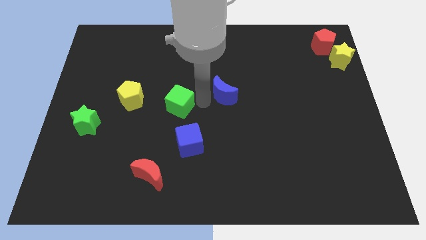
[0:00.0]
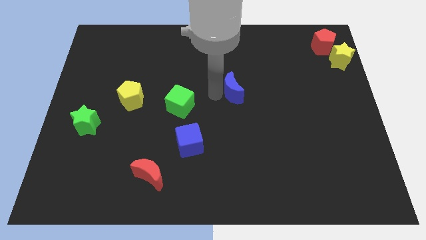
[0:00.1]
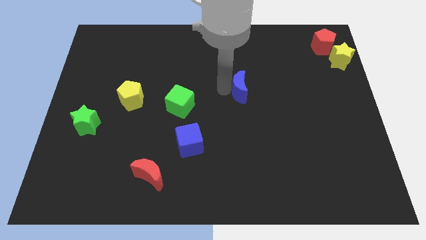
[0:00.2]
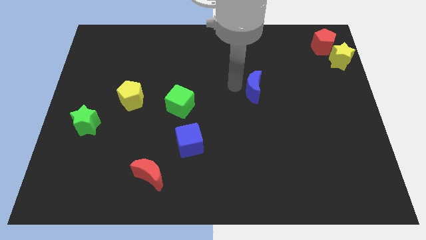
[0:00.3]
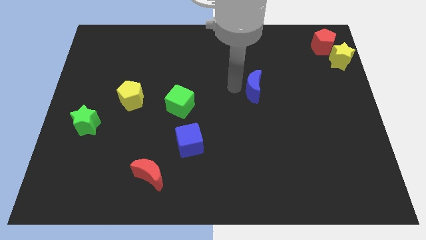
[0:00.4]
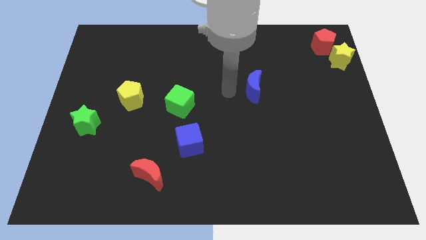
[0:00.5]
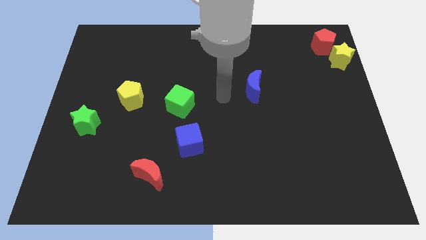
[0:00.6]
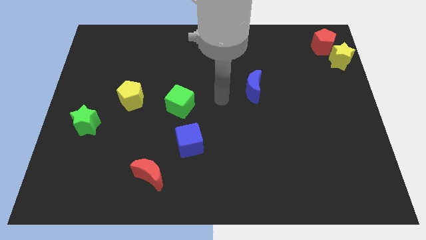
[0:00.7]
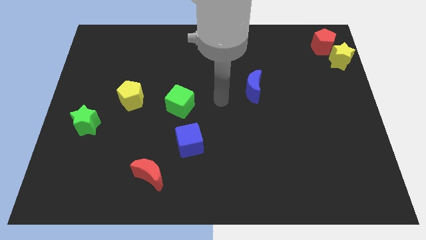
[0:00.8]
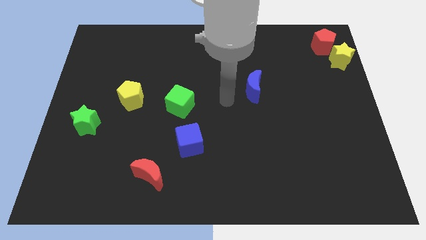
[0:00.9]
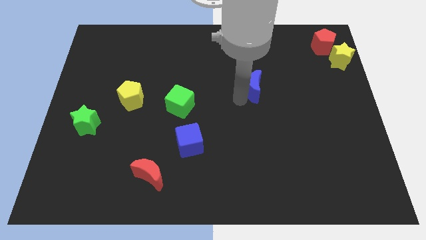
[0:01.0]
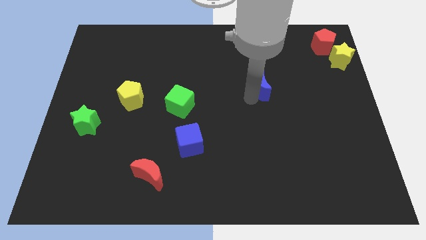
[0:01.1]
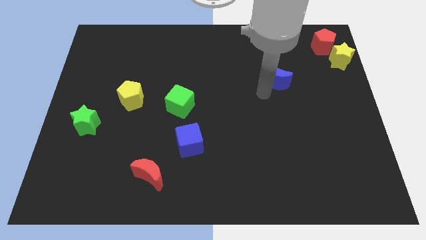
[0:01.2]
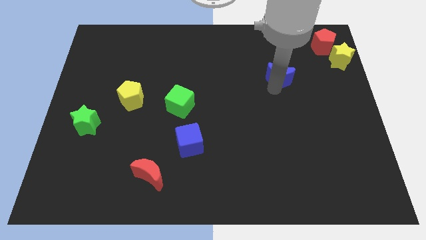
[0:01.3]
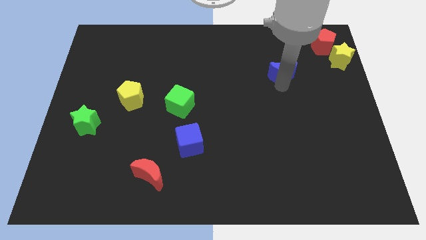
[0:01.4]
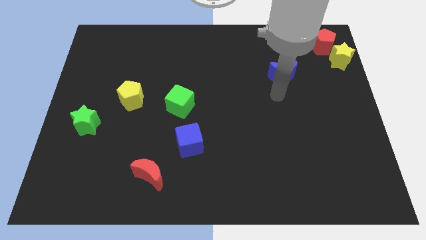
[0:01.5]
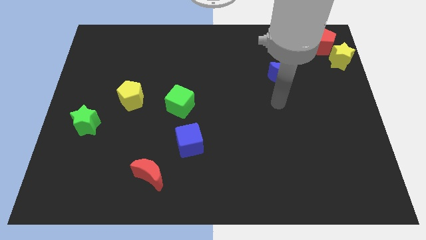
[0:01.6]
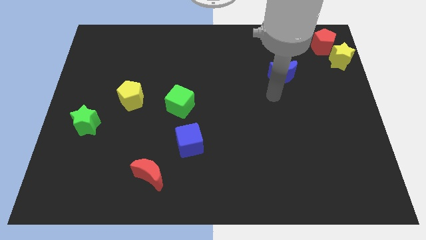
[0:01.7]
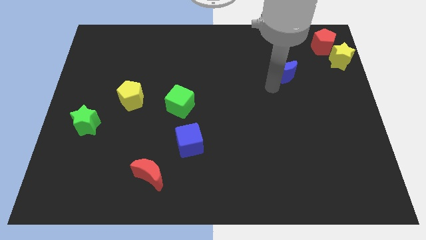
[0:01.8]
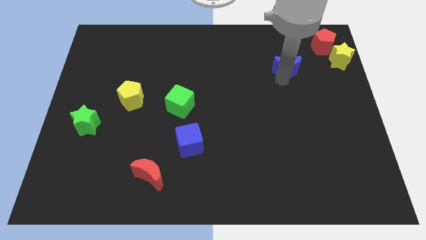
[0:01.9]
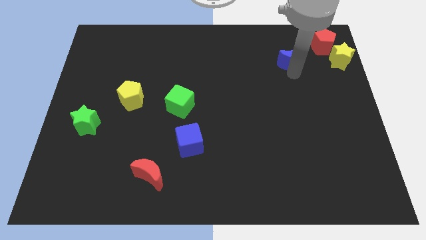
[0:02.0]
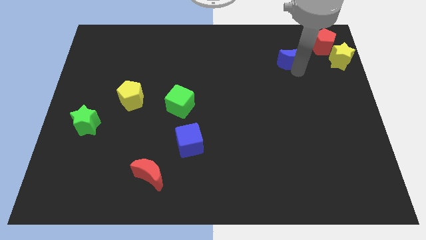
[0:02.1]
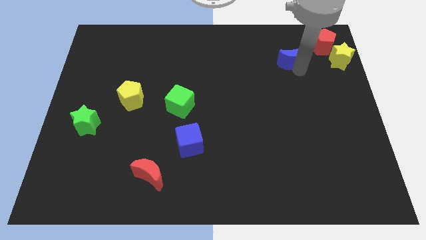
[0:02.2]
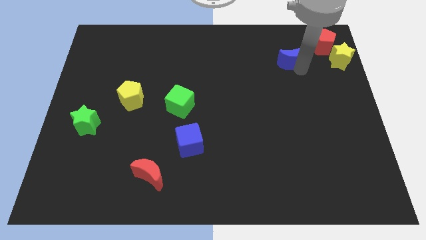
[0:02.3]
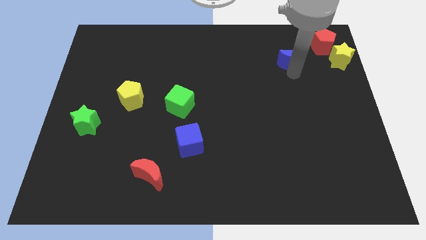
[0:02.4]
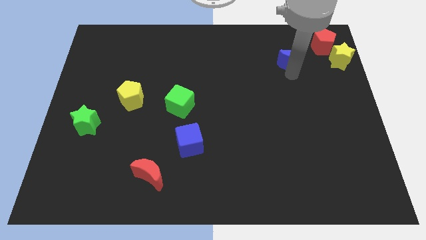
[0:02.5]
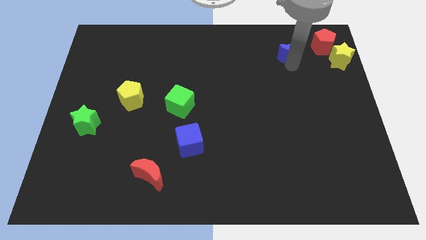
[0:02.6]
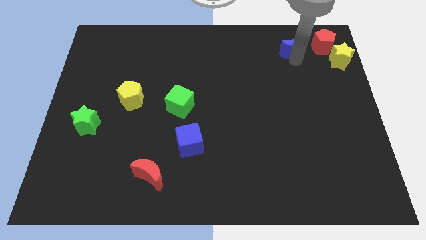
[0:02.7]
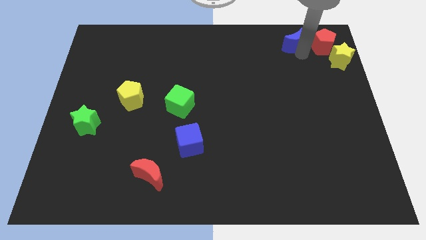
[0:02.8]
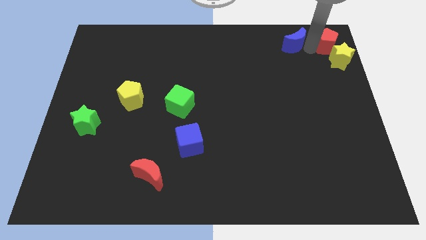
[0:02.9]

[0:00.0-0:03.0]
push the blue moon towards the top right corner of the board

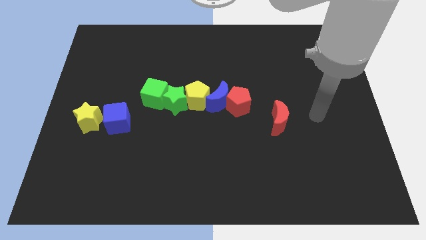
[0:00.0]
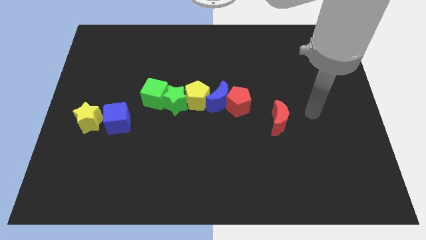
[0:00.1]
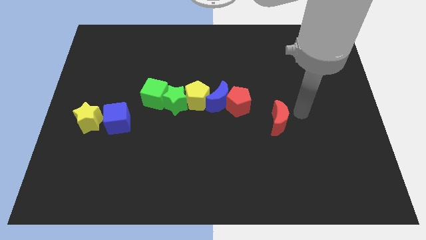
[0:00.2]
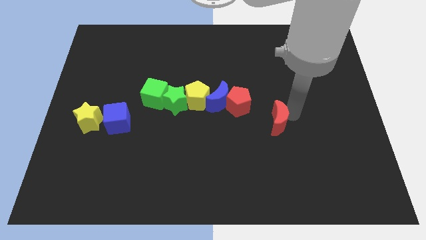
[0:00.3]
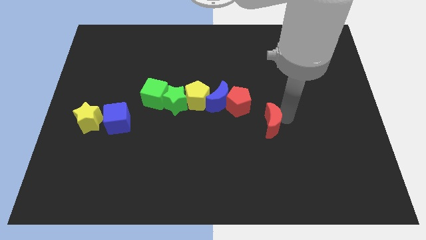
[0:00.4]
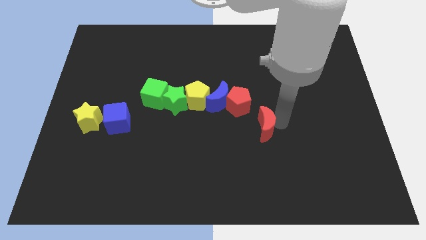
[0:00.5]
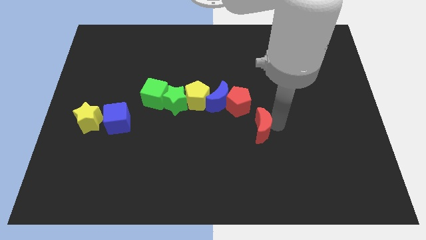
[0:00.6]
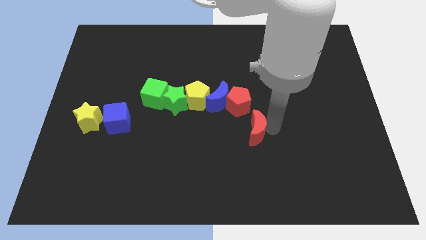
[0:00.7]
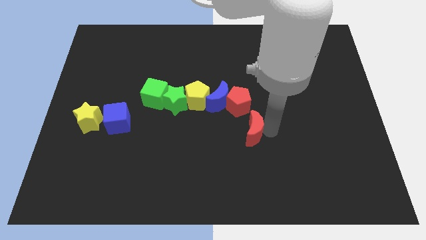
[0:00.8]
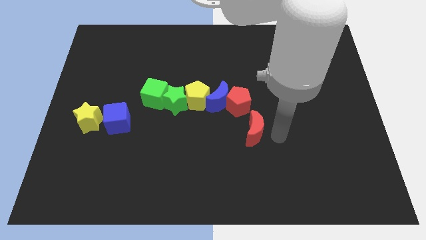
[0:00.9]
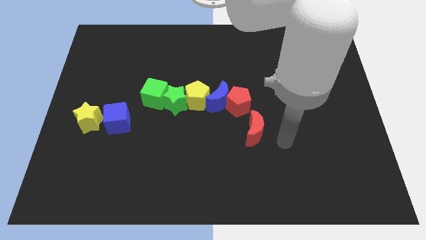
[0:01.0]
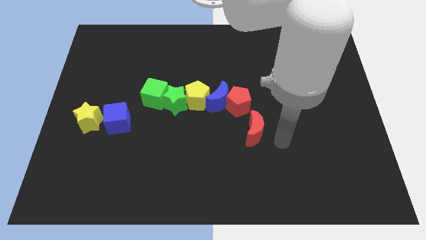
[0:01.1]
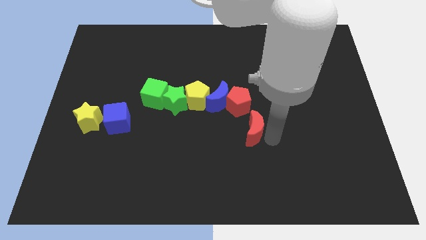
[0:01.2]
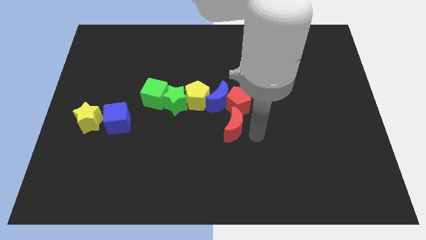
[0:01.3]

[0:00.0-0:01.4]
place the red crescent under the red pentagon

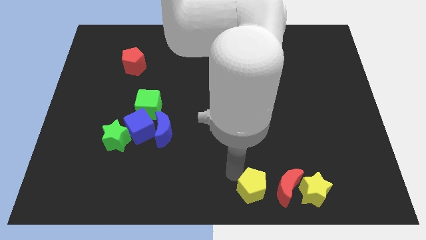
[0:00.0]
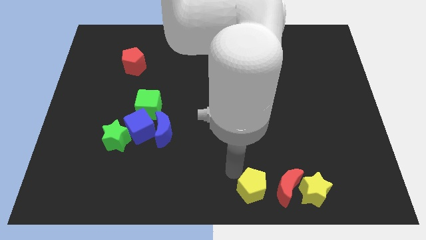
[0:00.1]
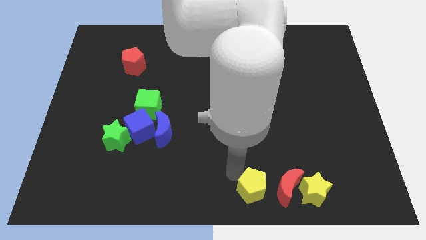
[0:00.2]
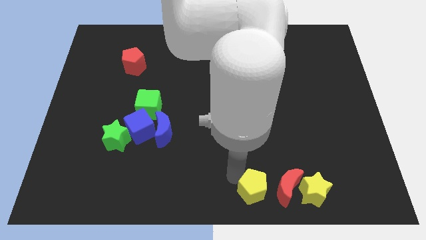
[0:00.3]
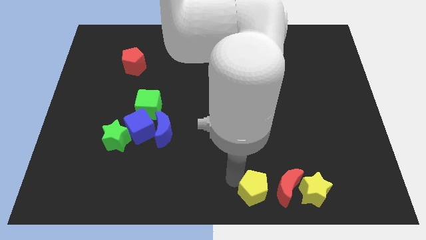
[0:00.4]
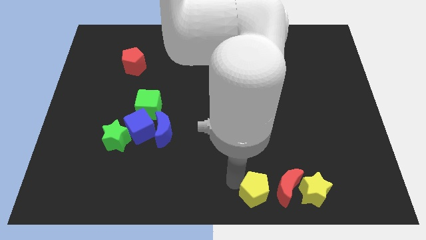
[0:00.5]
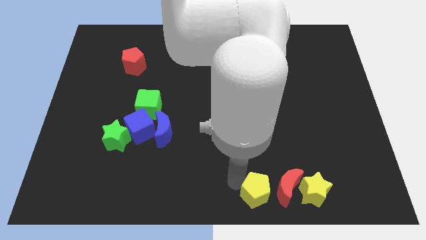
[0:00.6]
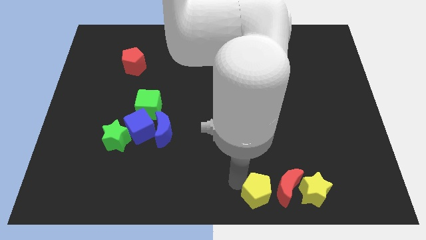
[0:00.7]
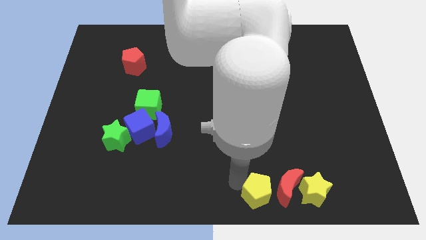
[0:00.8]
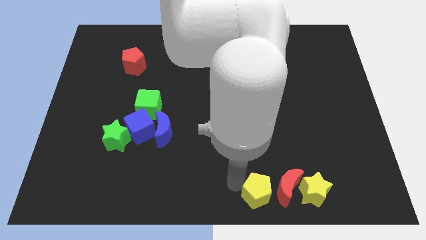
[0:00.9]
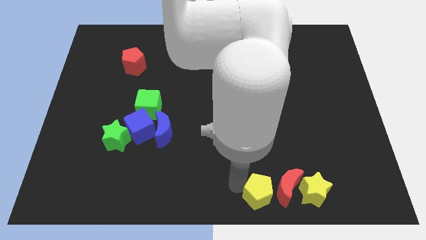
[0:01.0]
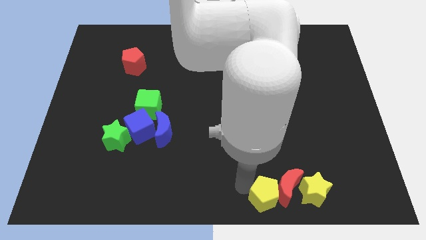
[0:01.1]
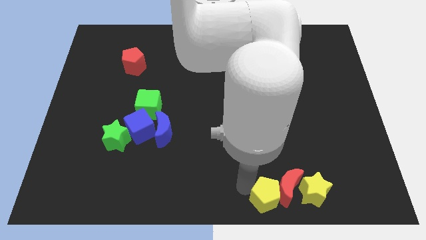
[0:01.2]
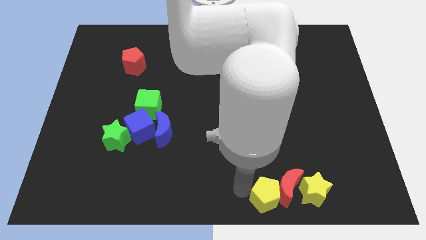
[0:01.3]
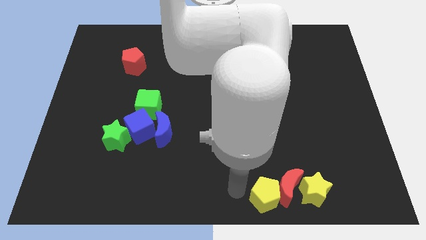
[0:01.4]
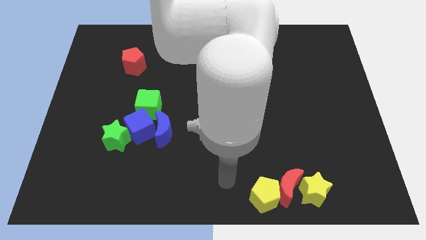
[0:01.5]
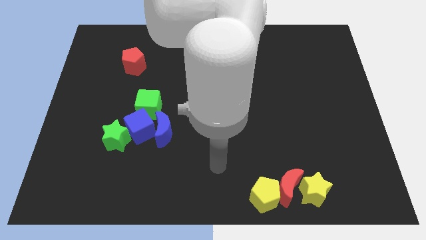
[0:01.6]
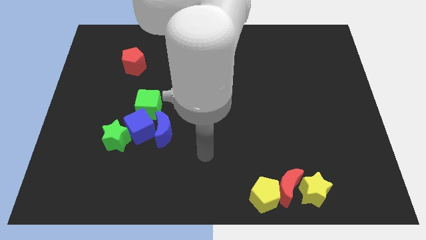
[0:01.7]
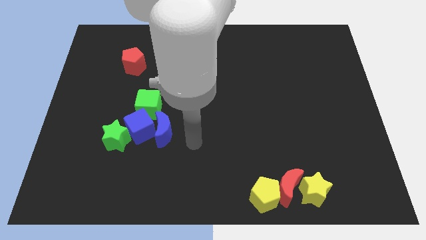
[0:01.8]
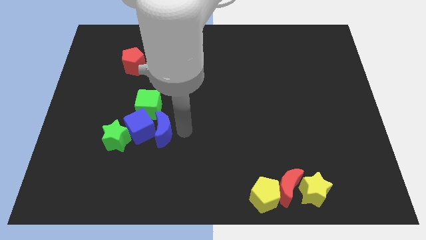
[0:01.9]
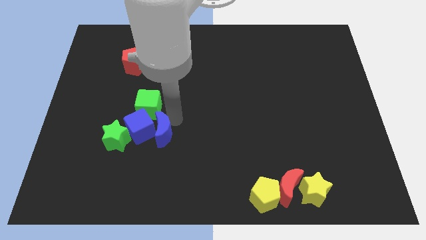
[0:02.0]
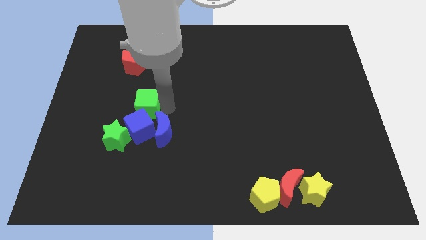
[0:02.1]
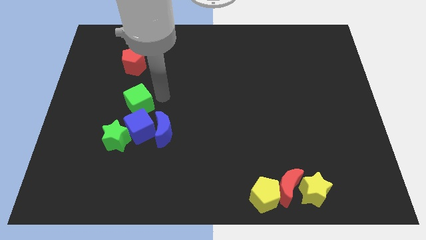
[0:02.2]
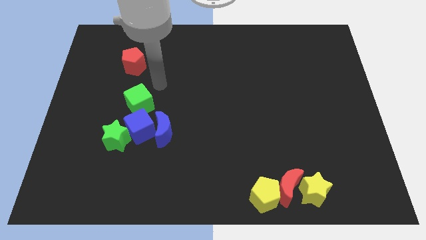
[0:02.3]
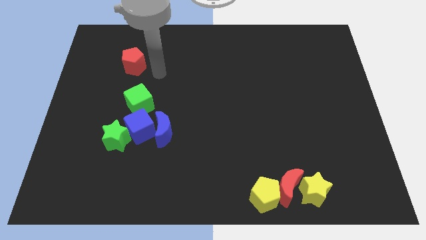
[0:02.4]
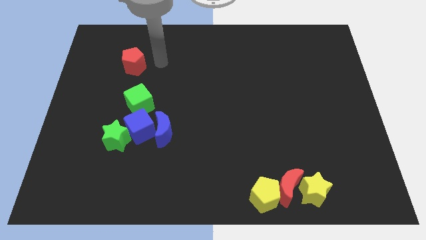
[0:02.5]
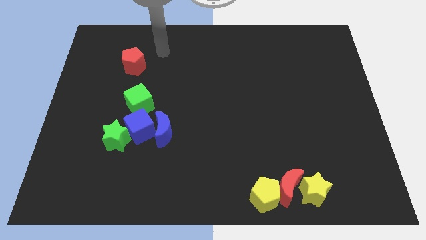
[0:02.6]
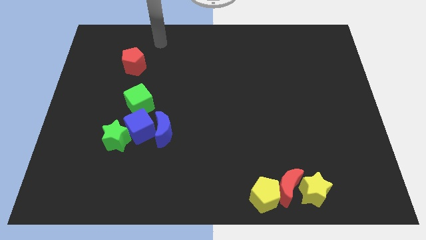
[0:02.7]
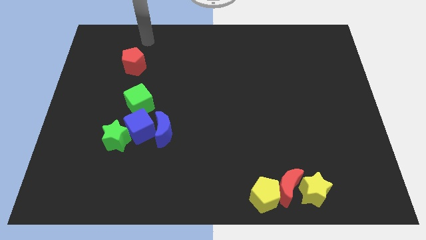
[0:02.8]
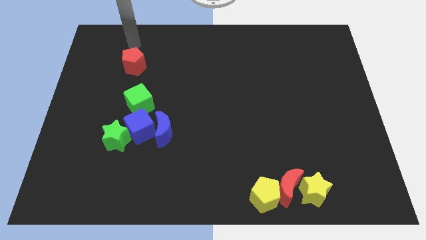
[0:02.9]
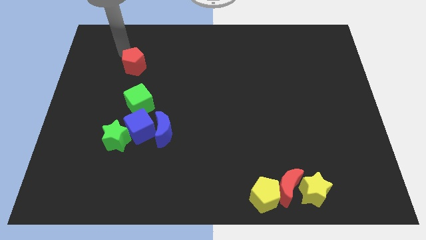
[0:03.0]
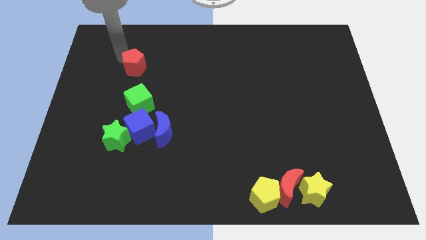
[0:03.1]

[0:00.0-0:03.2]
tap green cube slightly

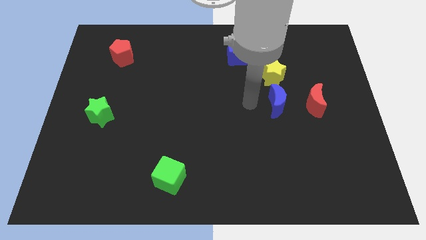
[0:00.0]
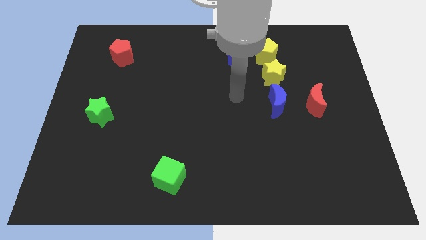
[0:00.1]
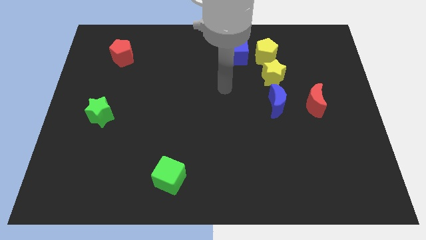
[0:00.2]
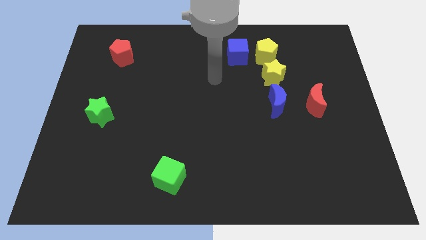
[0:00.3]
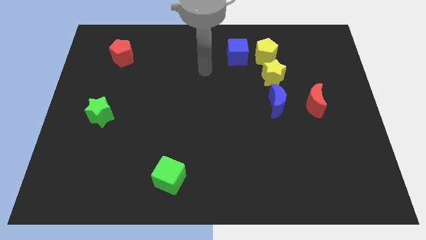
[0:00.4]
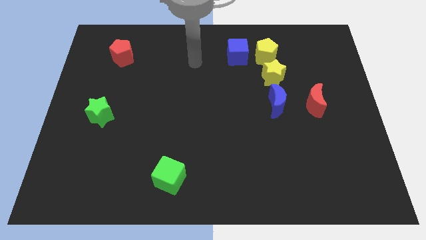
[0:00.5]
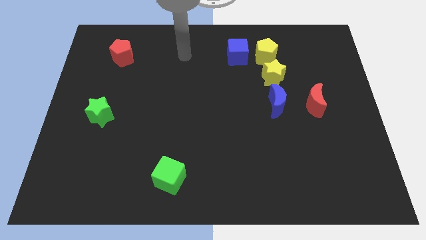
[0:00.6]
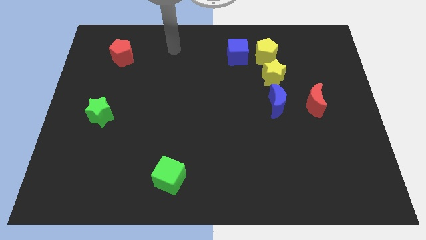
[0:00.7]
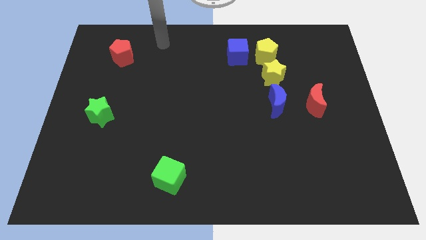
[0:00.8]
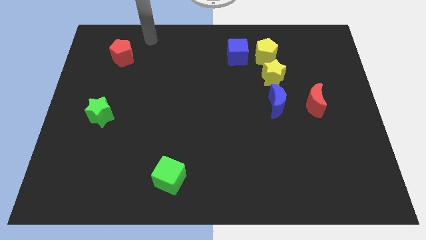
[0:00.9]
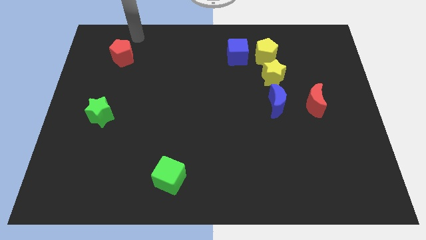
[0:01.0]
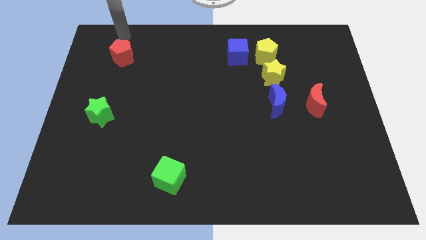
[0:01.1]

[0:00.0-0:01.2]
move the arm towards the top of red pentagon

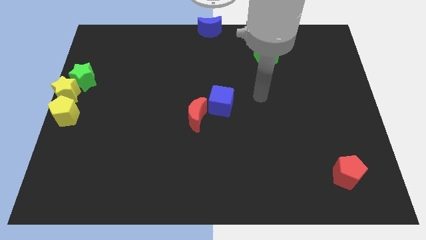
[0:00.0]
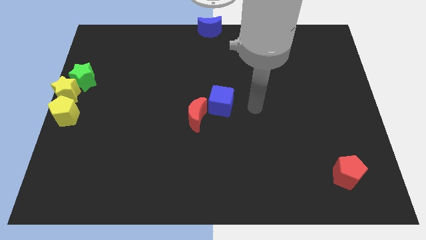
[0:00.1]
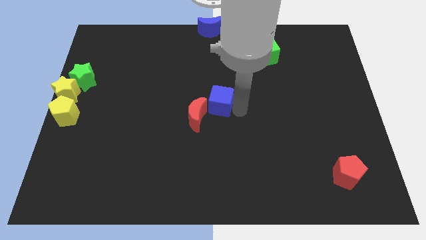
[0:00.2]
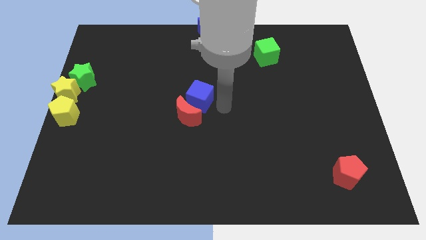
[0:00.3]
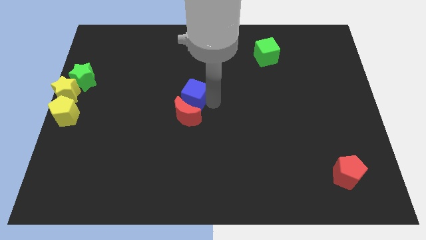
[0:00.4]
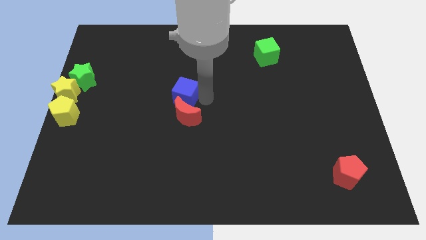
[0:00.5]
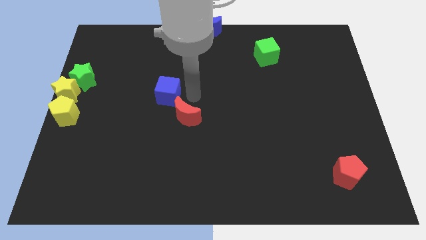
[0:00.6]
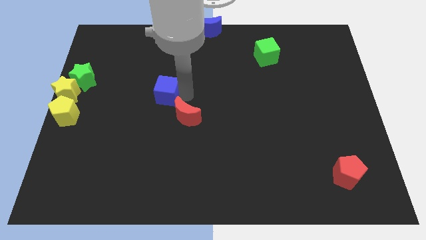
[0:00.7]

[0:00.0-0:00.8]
push the blue cube slightly towards the left
